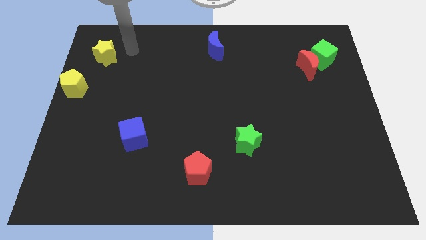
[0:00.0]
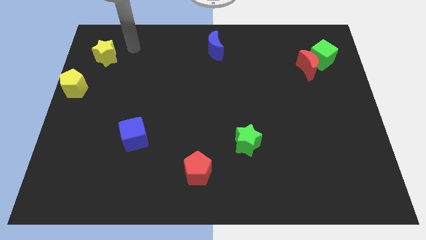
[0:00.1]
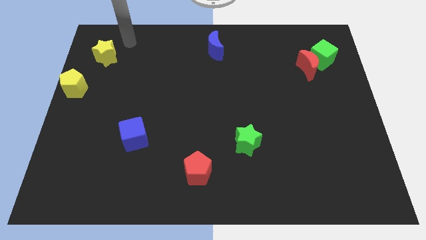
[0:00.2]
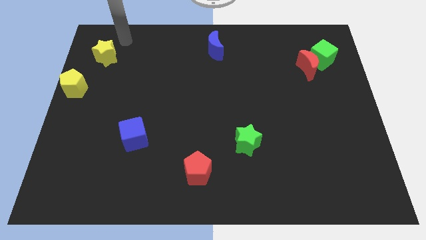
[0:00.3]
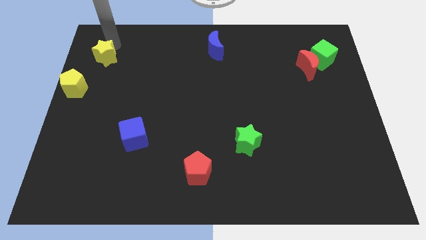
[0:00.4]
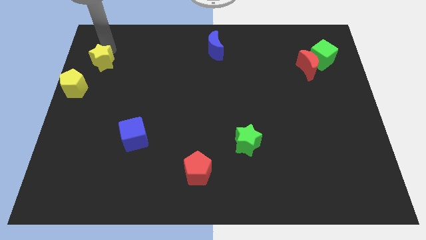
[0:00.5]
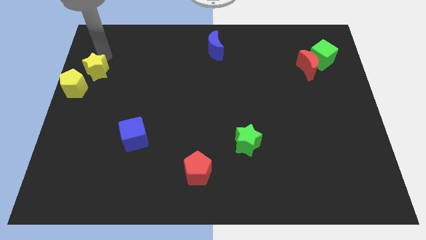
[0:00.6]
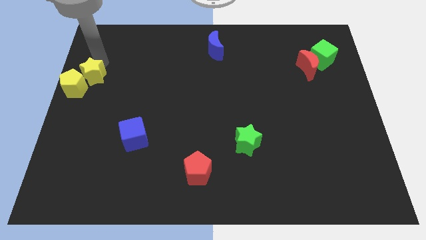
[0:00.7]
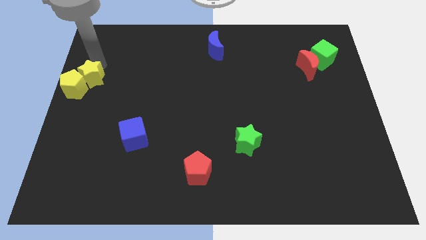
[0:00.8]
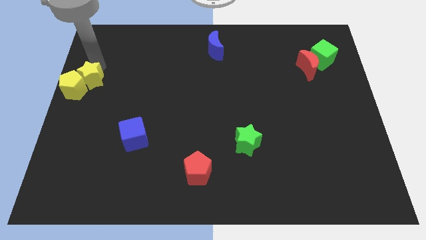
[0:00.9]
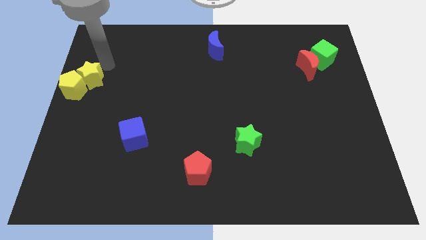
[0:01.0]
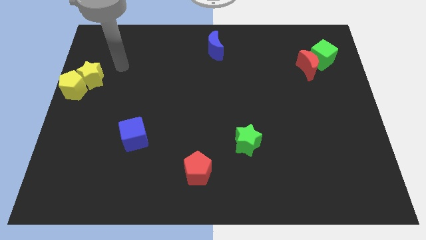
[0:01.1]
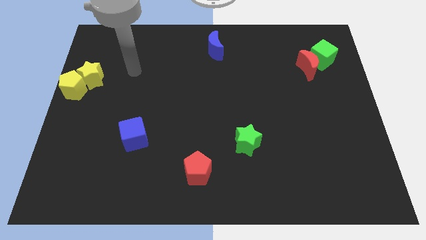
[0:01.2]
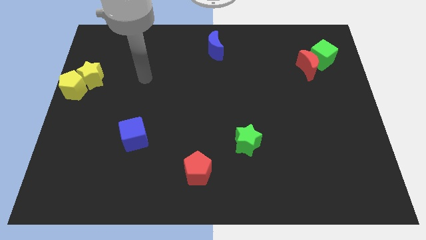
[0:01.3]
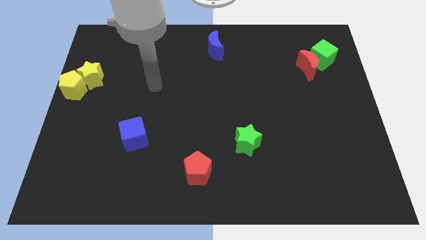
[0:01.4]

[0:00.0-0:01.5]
push yellow star in to yellow pentagon

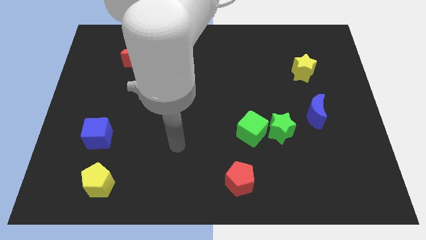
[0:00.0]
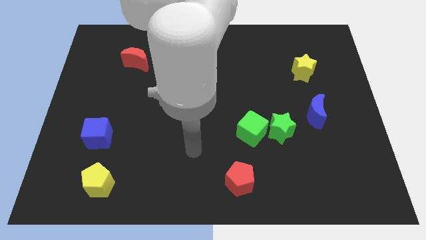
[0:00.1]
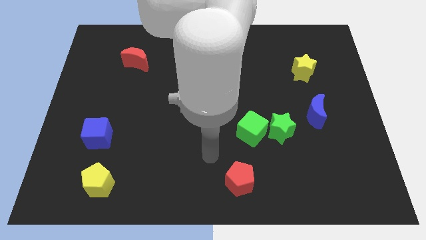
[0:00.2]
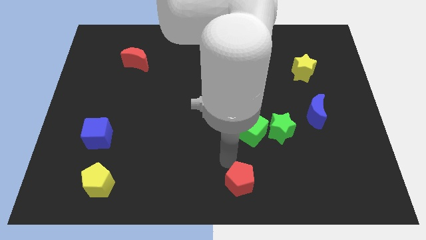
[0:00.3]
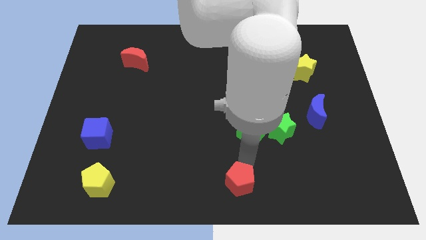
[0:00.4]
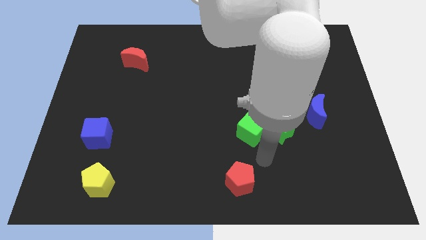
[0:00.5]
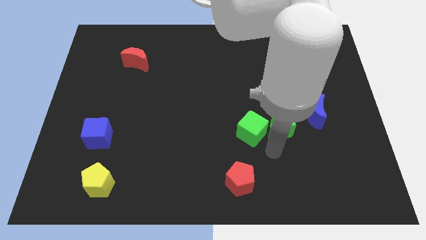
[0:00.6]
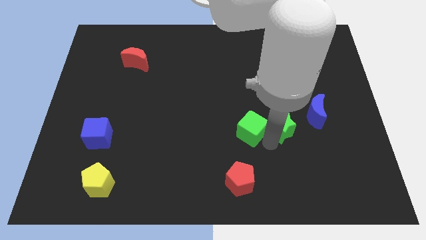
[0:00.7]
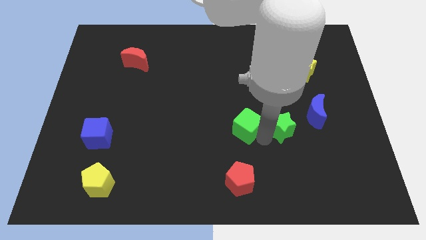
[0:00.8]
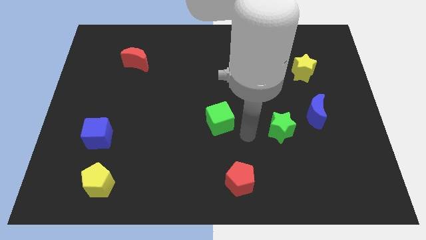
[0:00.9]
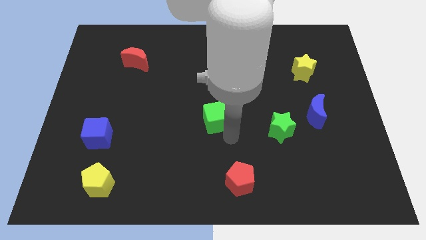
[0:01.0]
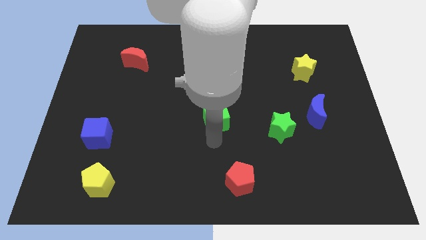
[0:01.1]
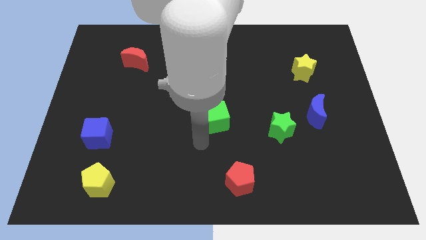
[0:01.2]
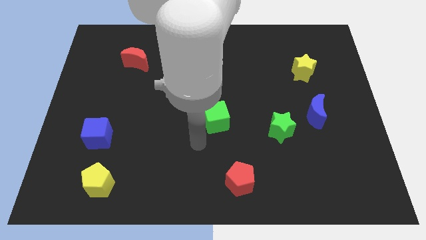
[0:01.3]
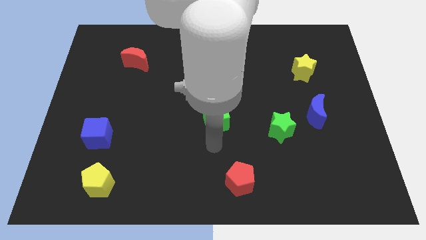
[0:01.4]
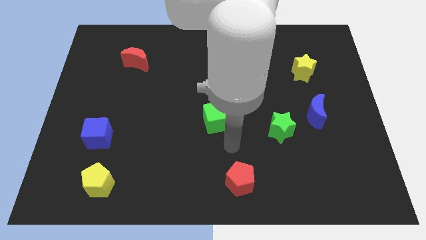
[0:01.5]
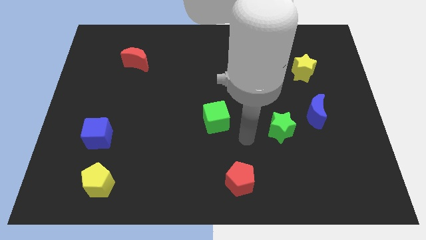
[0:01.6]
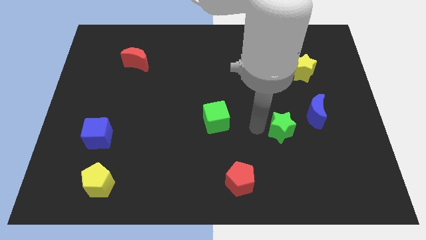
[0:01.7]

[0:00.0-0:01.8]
slide the green cube towards the center of the board

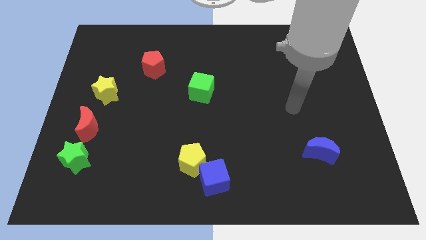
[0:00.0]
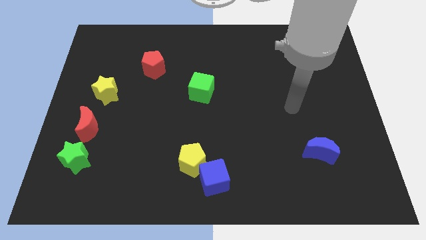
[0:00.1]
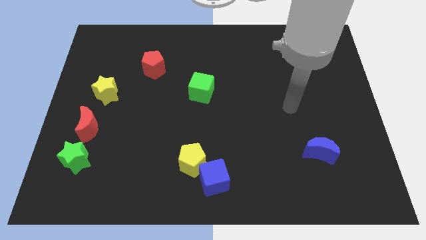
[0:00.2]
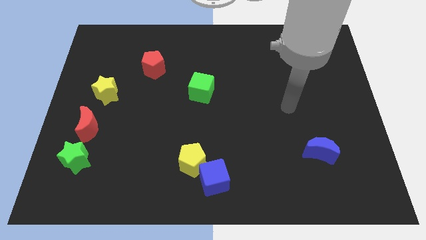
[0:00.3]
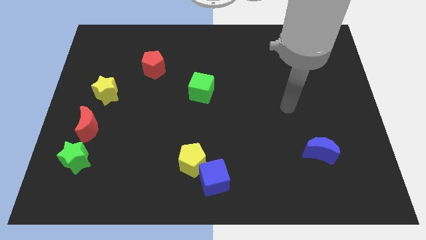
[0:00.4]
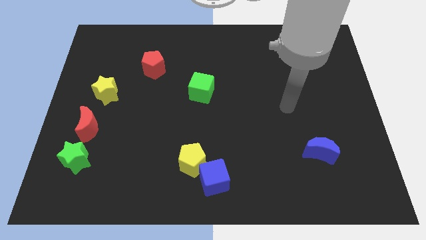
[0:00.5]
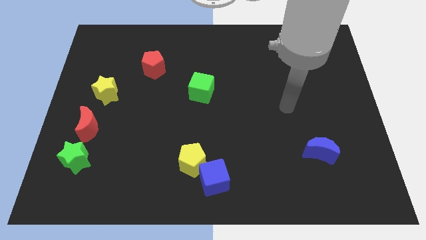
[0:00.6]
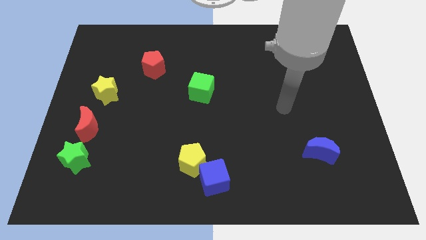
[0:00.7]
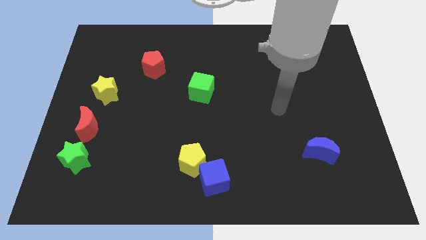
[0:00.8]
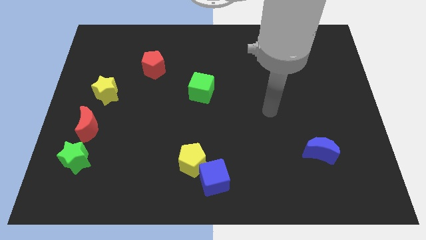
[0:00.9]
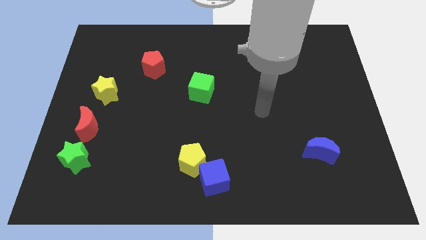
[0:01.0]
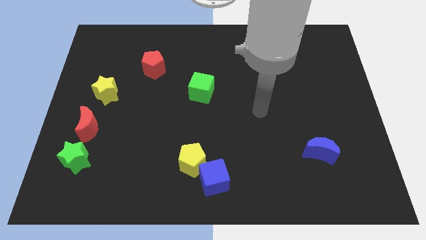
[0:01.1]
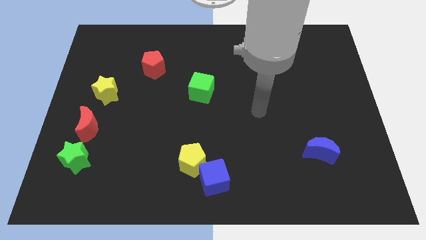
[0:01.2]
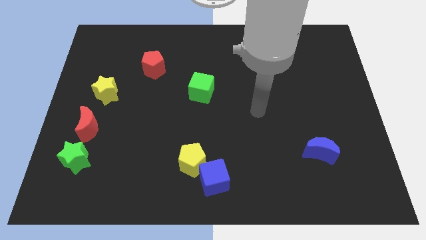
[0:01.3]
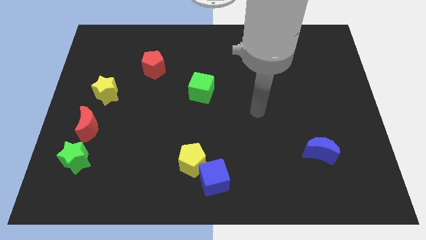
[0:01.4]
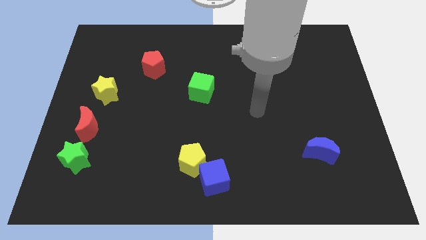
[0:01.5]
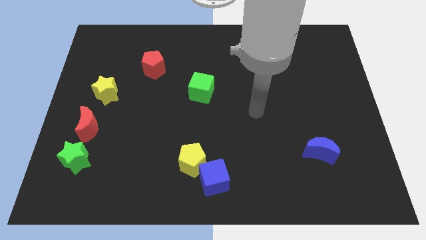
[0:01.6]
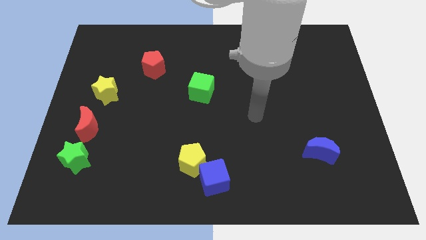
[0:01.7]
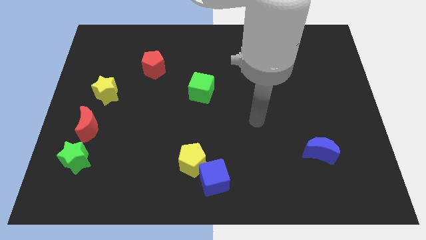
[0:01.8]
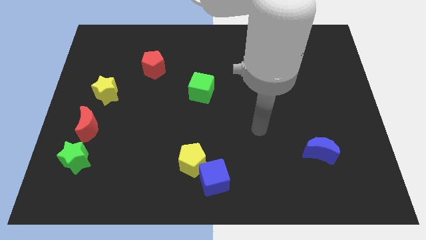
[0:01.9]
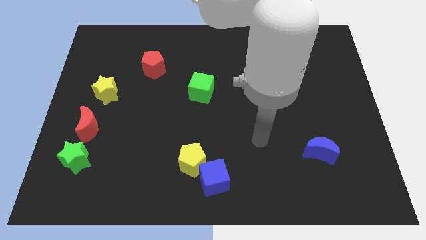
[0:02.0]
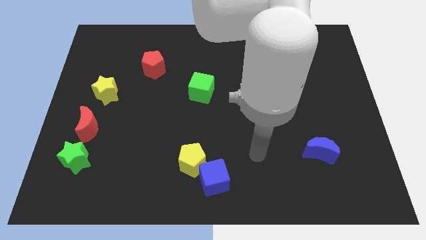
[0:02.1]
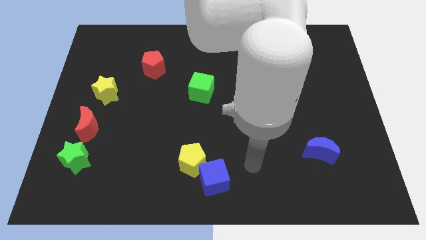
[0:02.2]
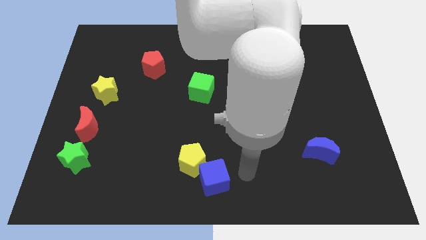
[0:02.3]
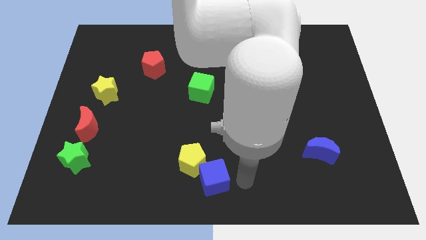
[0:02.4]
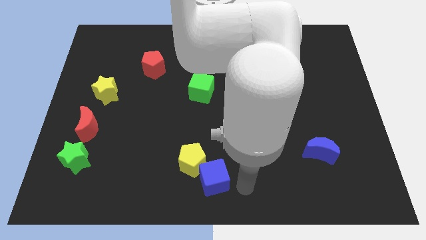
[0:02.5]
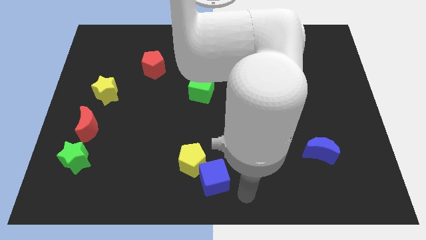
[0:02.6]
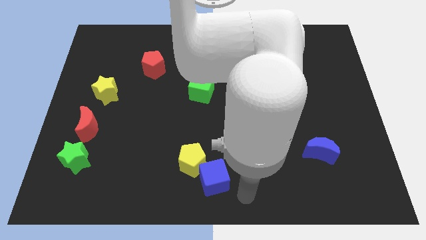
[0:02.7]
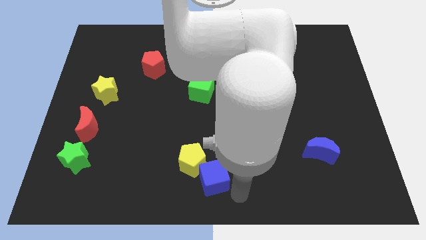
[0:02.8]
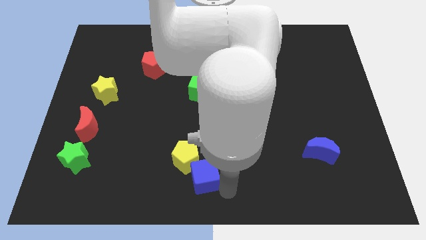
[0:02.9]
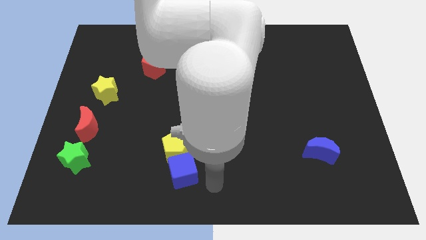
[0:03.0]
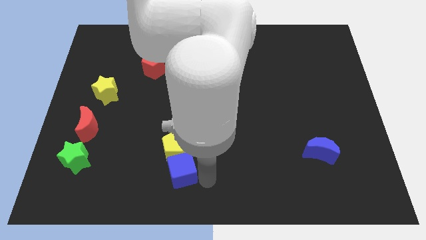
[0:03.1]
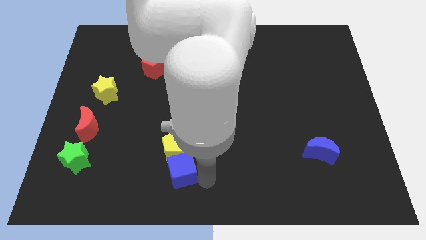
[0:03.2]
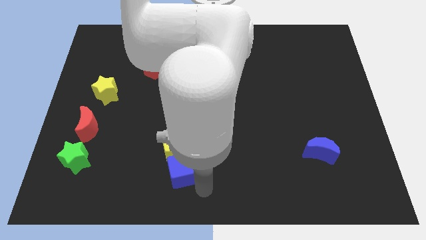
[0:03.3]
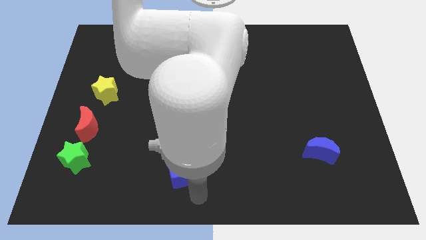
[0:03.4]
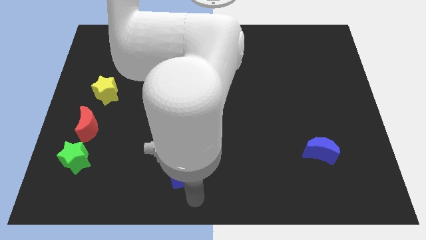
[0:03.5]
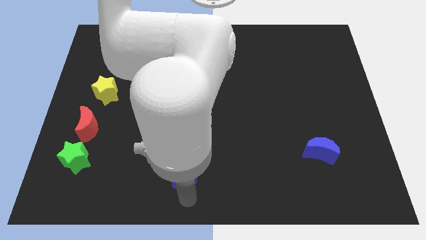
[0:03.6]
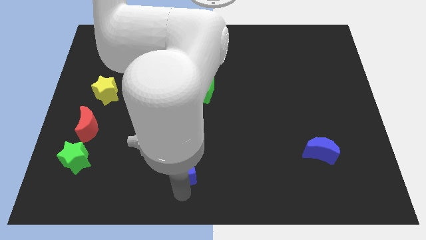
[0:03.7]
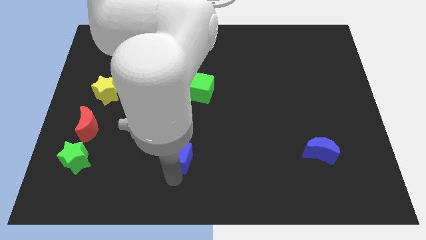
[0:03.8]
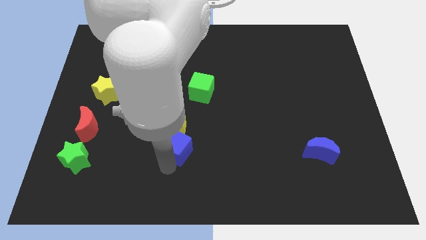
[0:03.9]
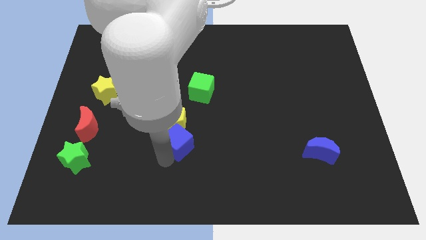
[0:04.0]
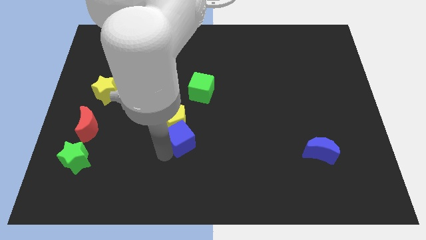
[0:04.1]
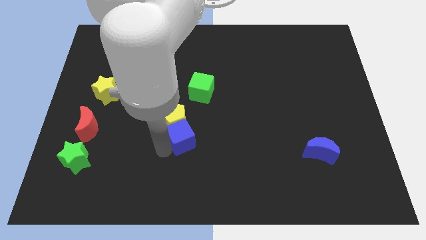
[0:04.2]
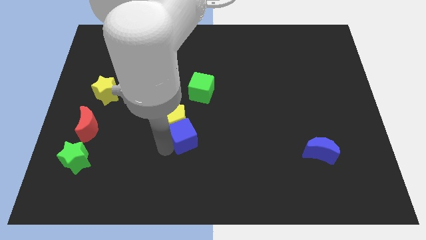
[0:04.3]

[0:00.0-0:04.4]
push the yellow pentagon with the blue cube slightly to the center of the board

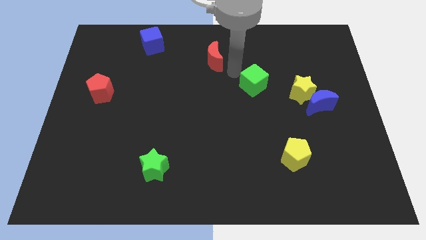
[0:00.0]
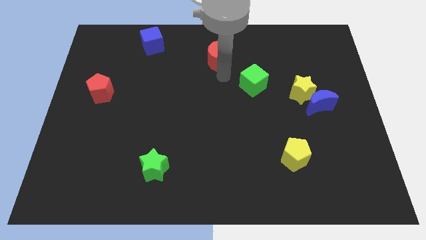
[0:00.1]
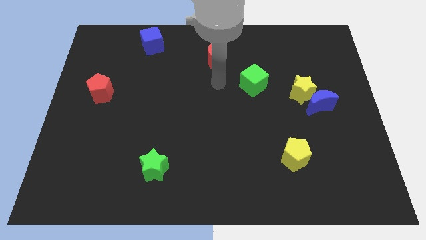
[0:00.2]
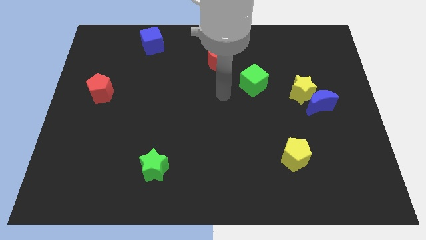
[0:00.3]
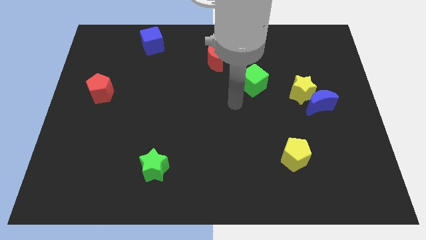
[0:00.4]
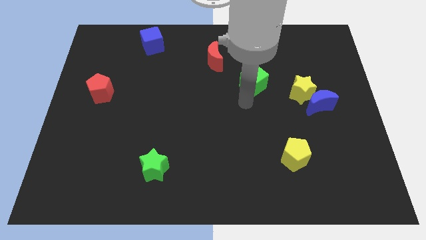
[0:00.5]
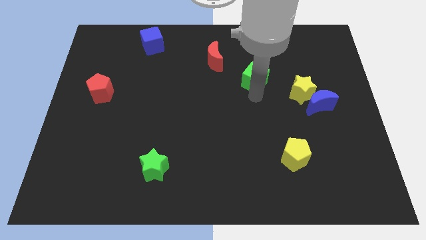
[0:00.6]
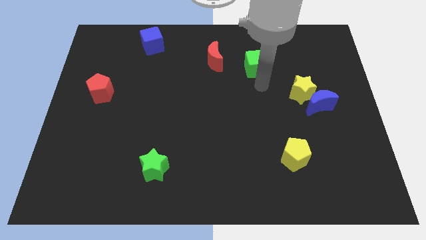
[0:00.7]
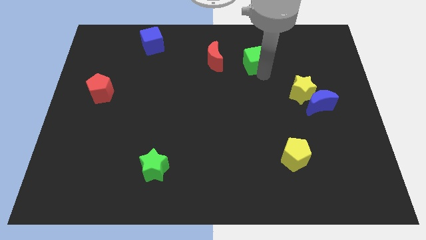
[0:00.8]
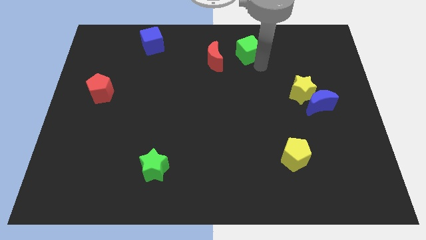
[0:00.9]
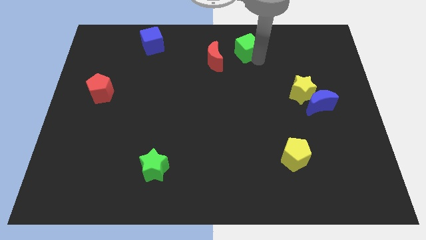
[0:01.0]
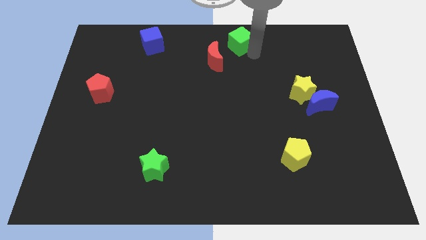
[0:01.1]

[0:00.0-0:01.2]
move green cube slightly up
